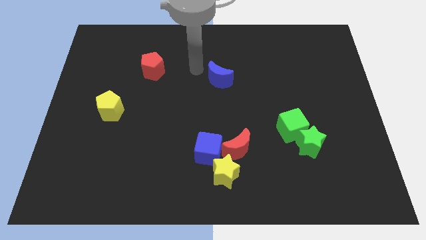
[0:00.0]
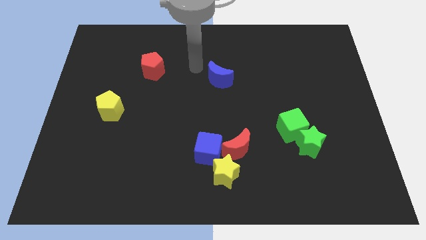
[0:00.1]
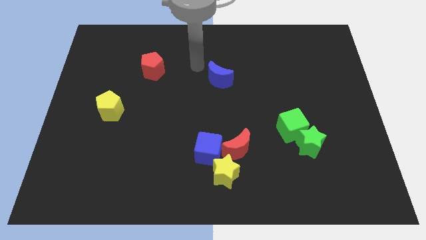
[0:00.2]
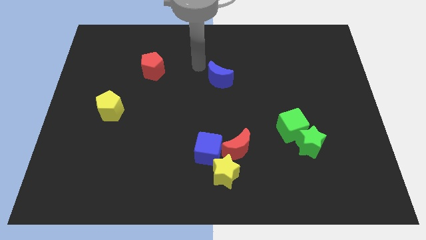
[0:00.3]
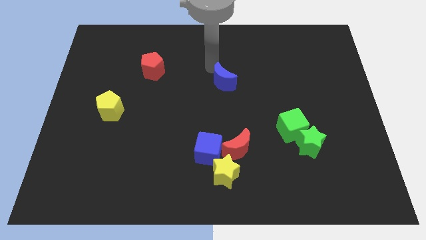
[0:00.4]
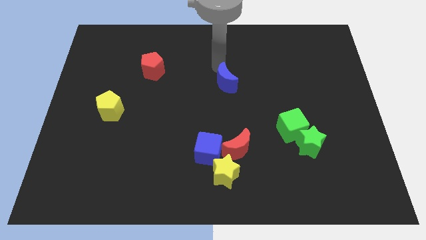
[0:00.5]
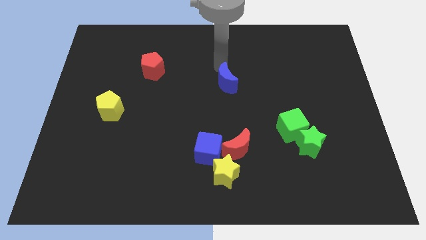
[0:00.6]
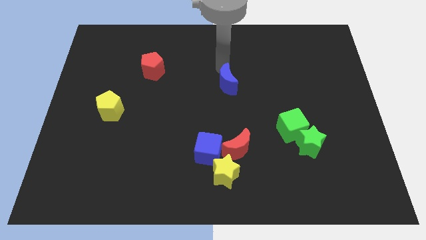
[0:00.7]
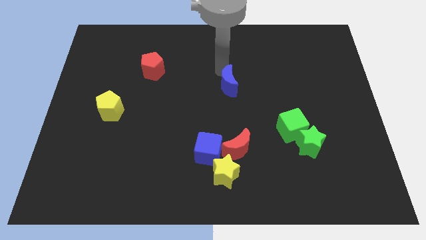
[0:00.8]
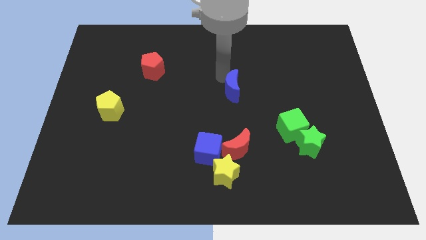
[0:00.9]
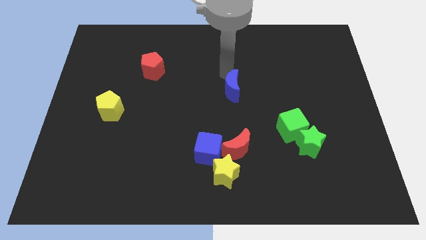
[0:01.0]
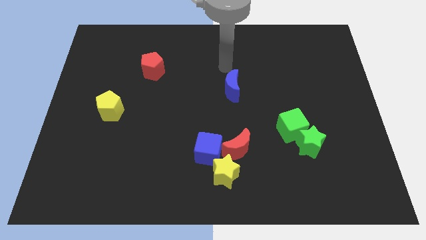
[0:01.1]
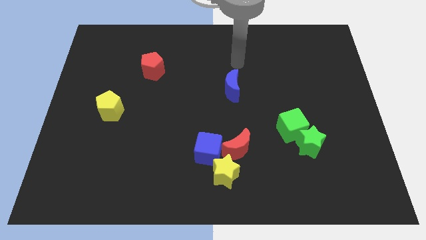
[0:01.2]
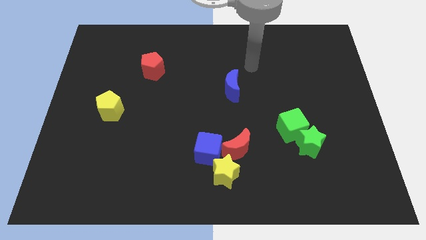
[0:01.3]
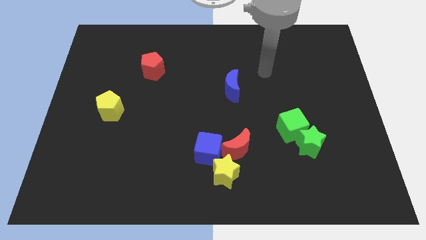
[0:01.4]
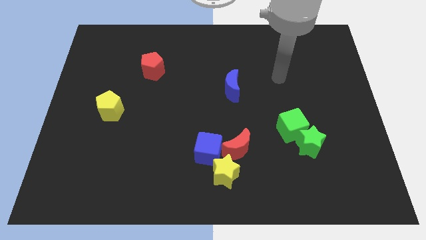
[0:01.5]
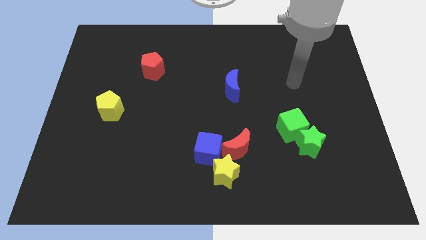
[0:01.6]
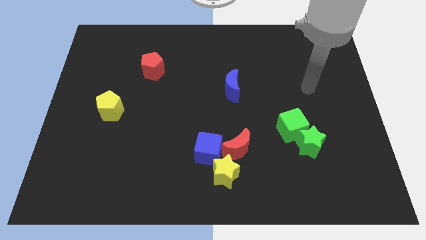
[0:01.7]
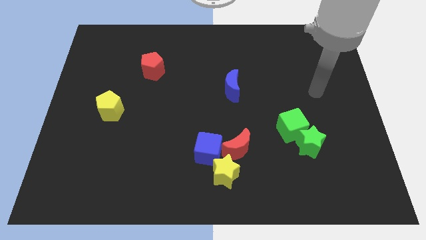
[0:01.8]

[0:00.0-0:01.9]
move the blue moon vertically above the red crescent

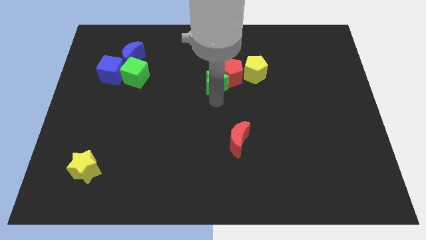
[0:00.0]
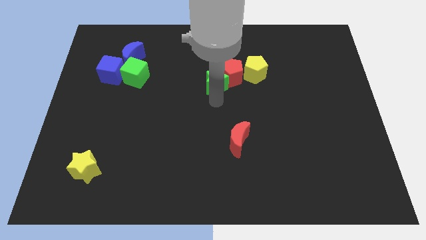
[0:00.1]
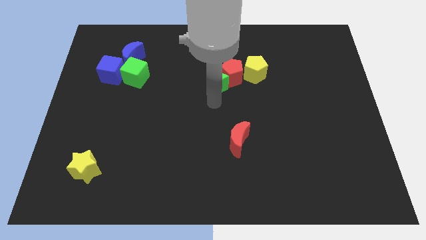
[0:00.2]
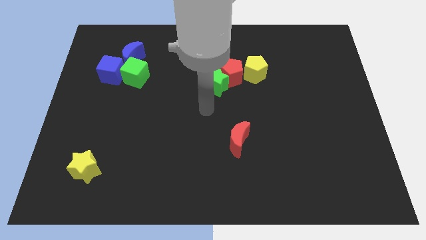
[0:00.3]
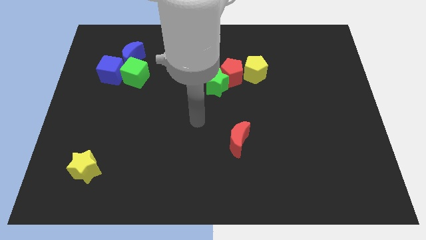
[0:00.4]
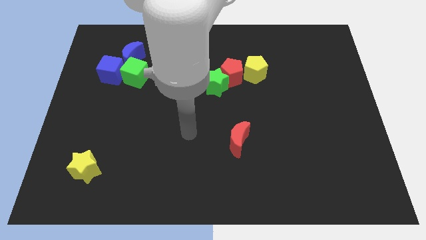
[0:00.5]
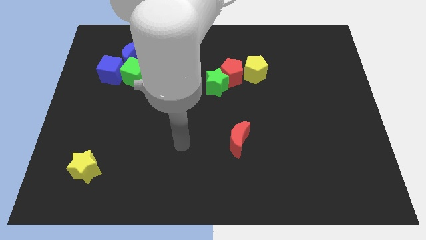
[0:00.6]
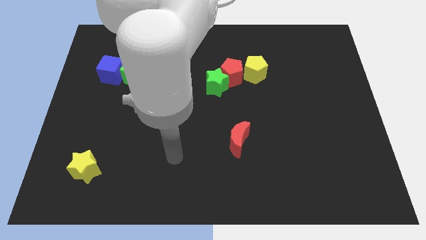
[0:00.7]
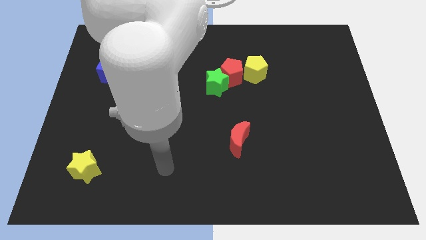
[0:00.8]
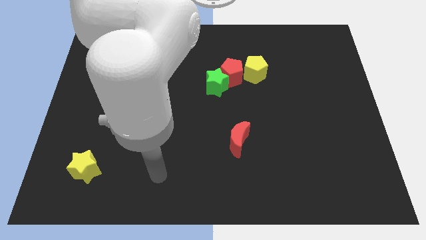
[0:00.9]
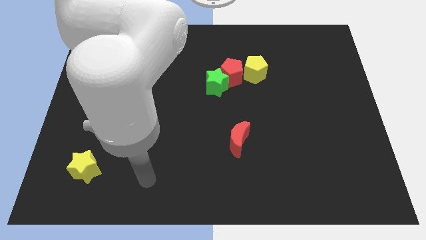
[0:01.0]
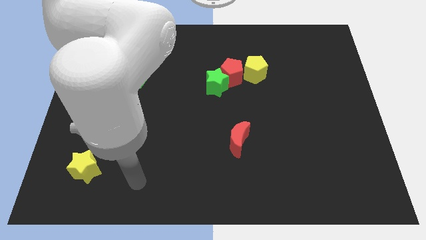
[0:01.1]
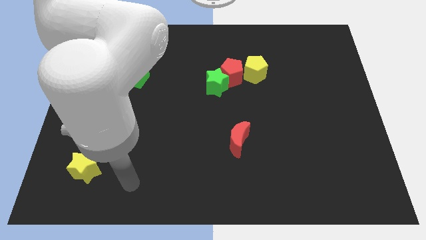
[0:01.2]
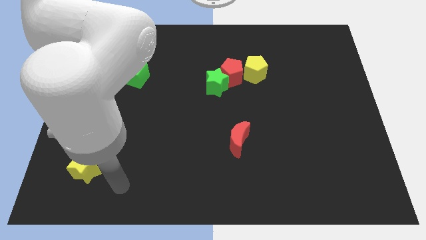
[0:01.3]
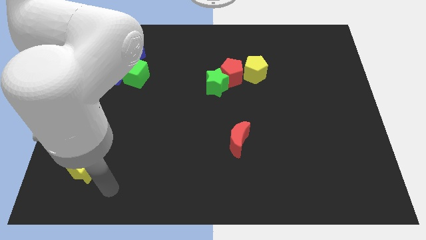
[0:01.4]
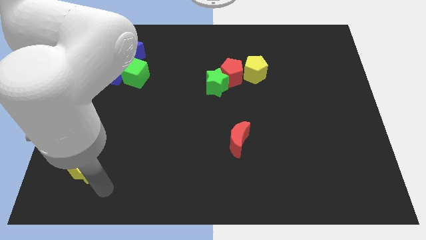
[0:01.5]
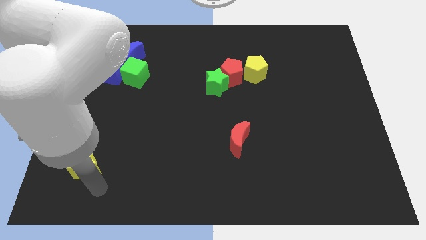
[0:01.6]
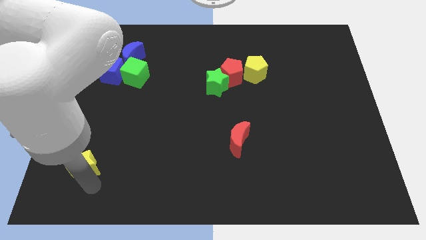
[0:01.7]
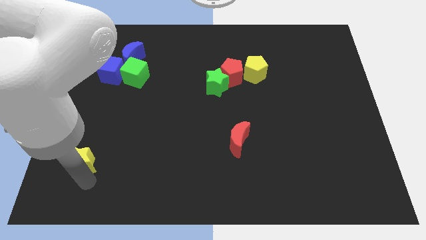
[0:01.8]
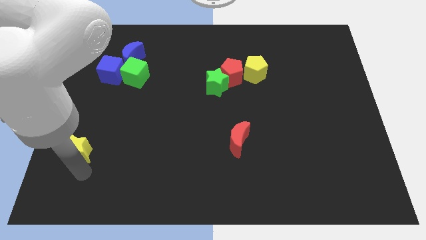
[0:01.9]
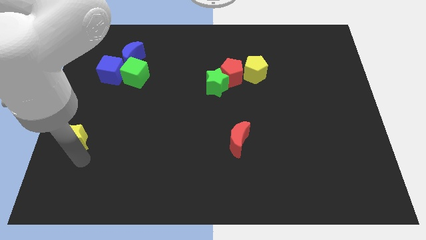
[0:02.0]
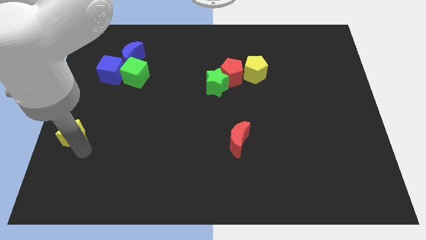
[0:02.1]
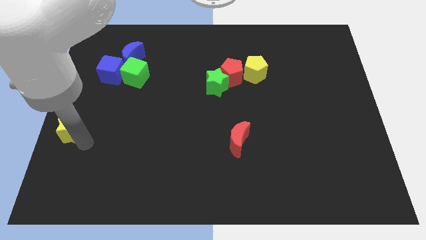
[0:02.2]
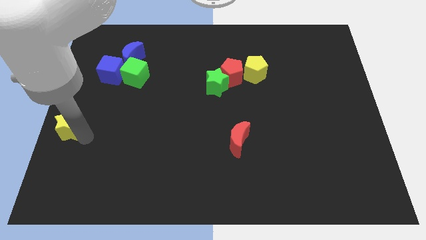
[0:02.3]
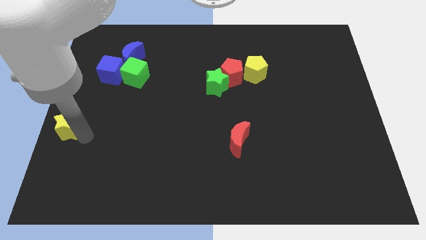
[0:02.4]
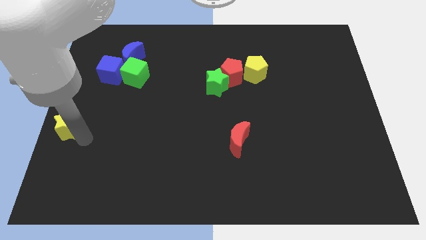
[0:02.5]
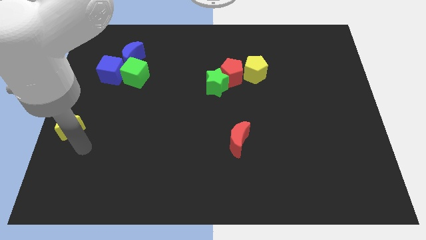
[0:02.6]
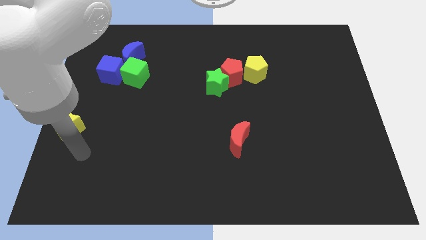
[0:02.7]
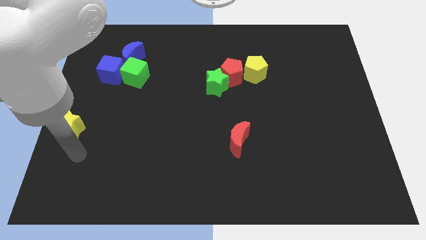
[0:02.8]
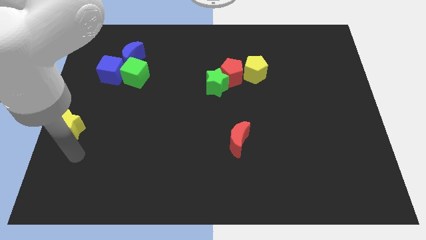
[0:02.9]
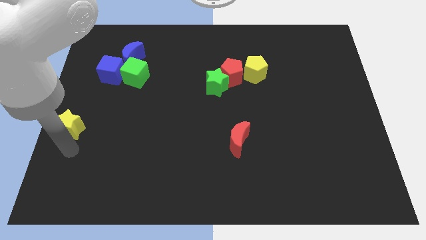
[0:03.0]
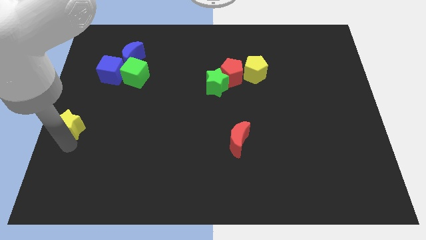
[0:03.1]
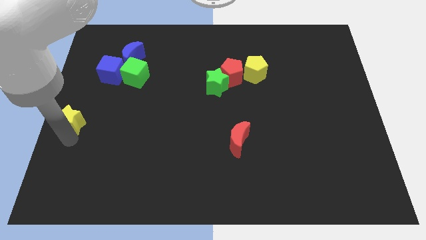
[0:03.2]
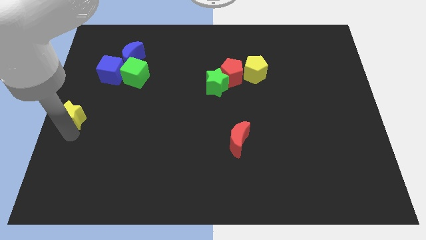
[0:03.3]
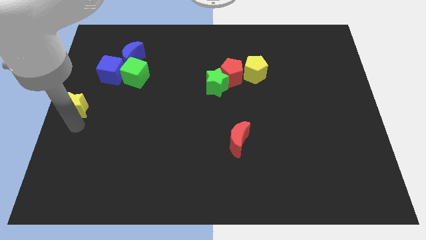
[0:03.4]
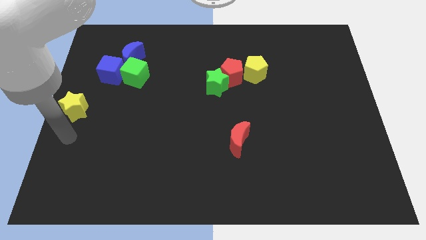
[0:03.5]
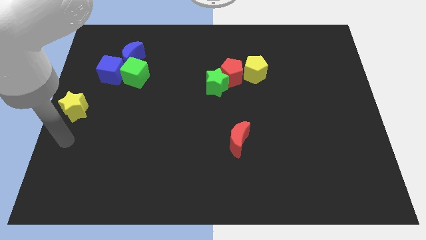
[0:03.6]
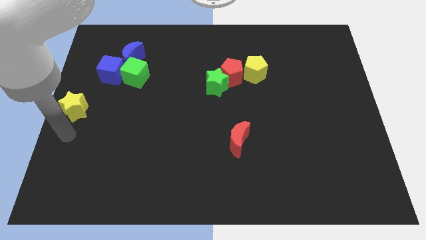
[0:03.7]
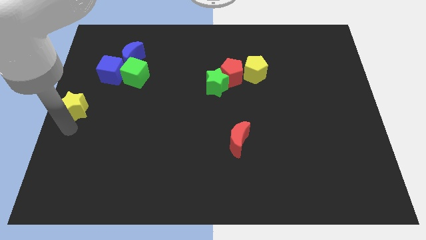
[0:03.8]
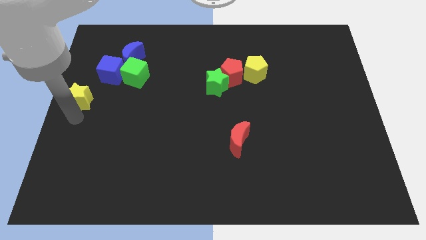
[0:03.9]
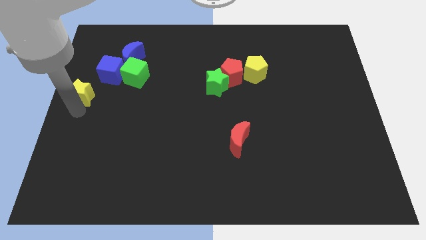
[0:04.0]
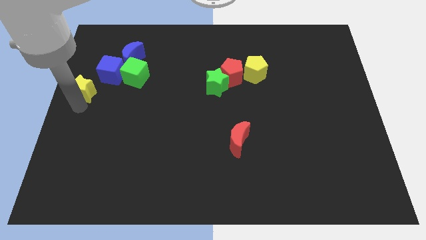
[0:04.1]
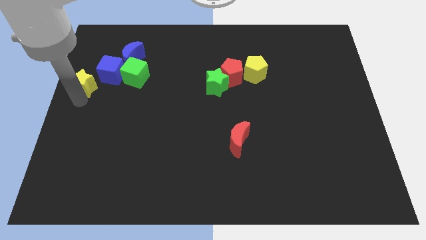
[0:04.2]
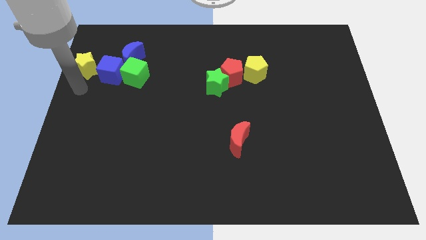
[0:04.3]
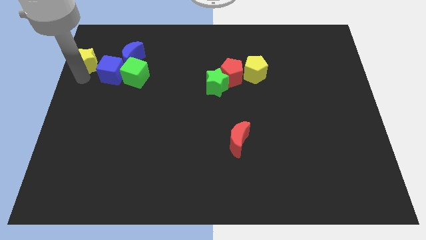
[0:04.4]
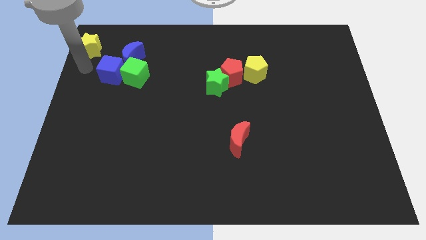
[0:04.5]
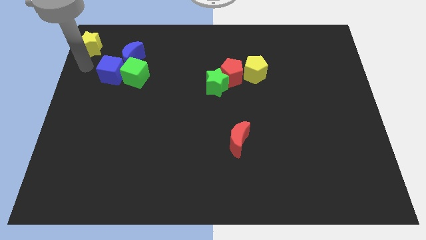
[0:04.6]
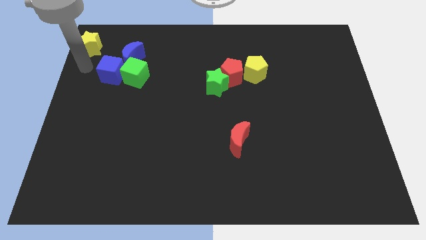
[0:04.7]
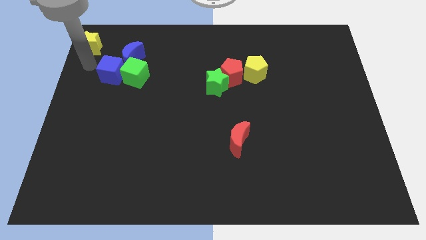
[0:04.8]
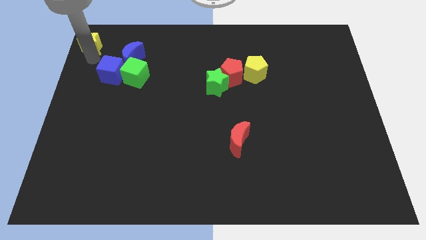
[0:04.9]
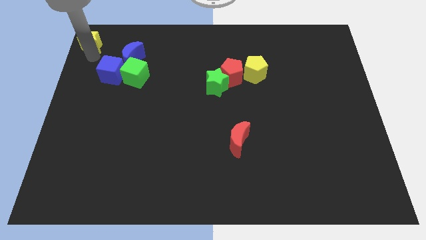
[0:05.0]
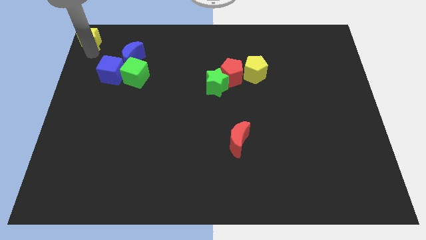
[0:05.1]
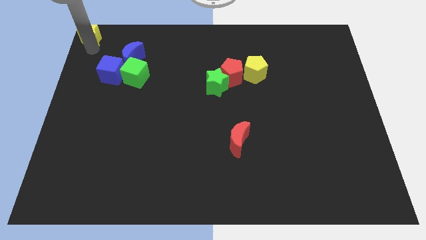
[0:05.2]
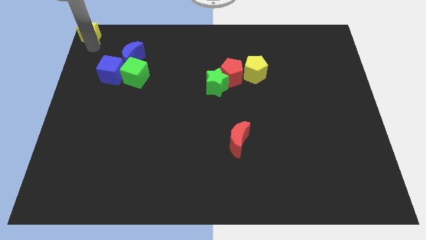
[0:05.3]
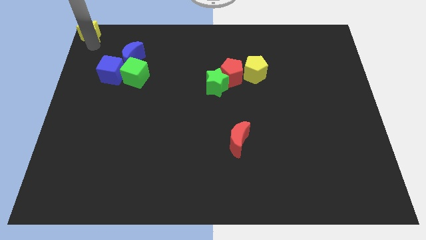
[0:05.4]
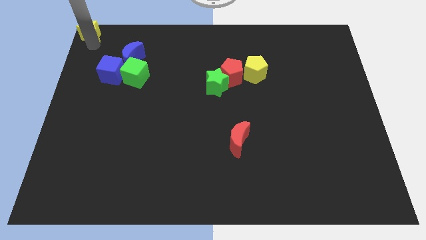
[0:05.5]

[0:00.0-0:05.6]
place the yellow star diagonal to the blue cube

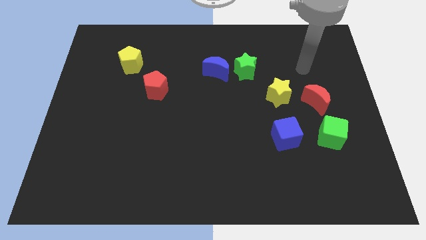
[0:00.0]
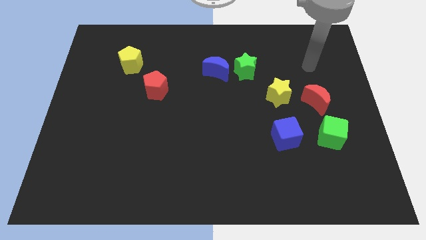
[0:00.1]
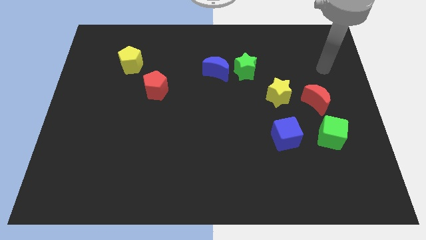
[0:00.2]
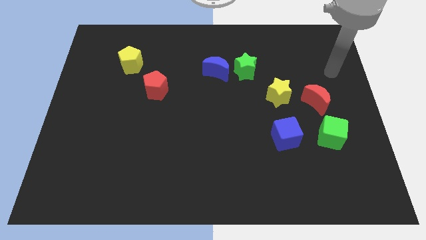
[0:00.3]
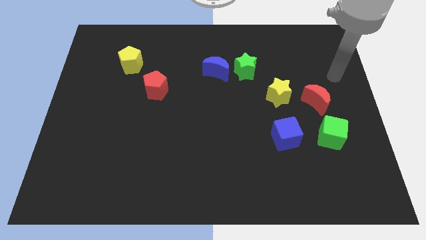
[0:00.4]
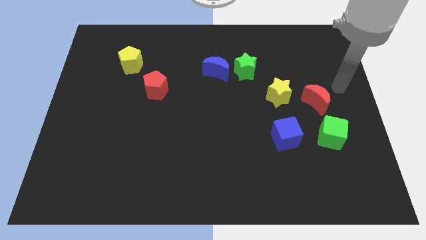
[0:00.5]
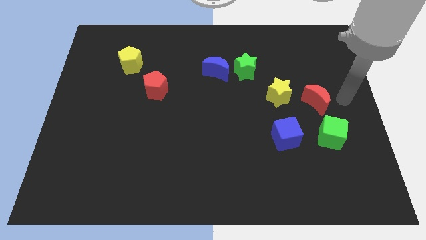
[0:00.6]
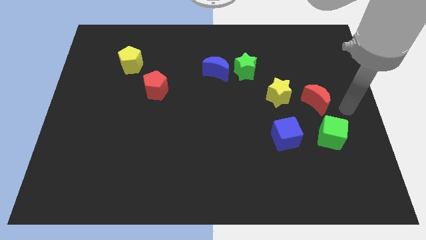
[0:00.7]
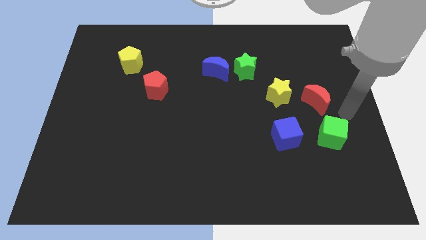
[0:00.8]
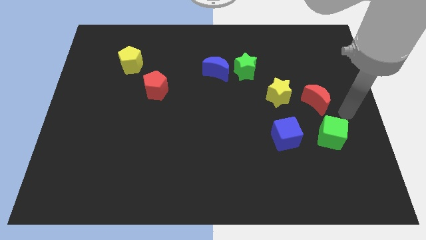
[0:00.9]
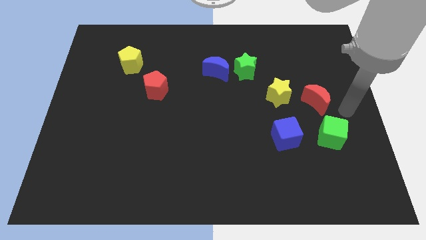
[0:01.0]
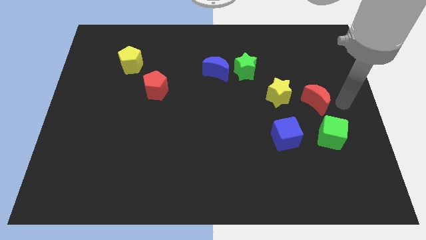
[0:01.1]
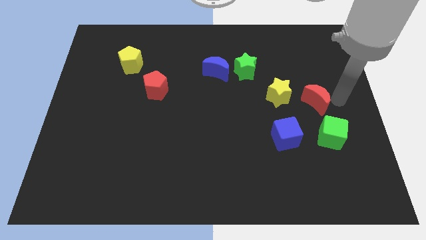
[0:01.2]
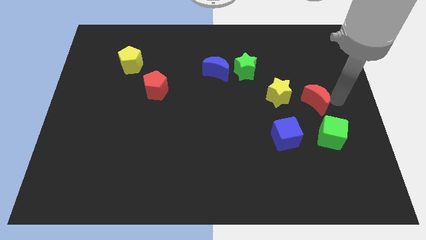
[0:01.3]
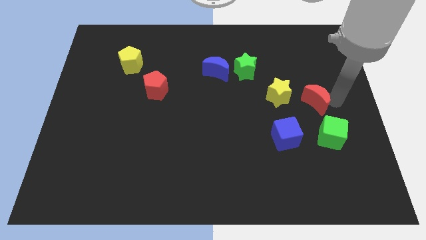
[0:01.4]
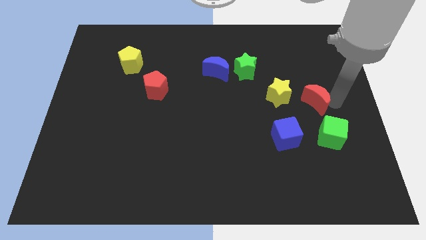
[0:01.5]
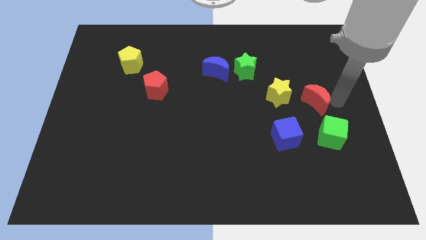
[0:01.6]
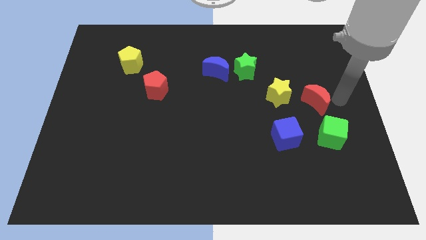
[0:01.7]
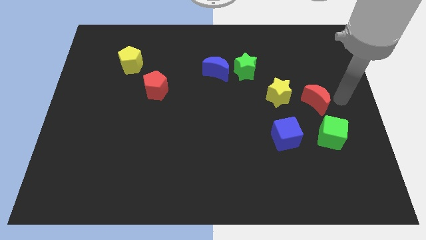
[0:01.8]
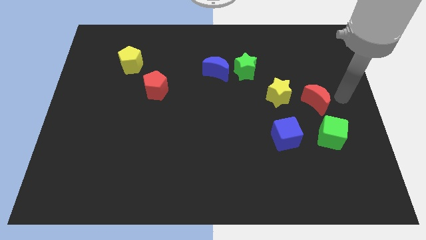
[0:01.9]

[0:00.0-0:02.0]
point your arm near red moon
